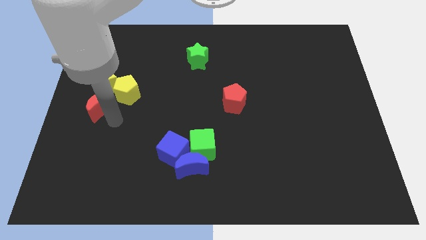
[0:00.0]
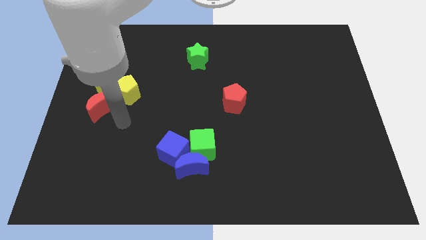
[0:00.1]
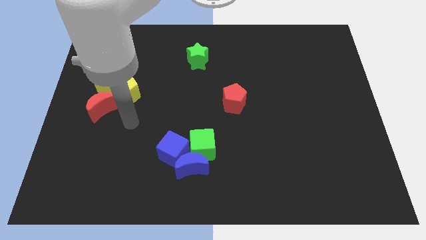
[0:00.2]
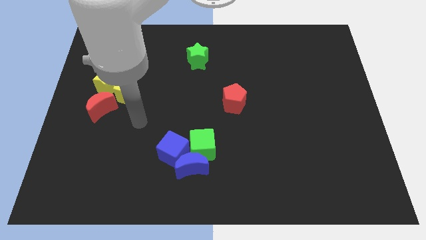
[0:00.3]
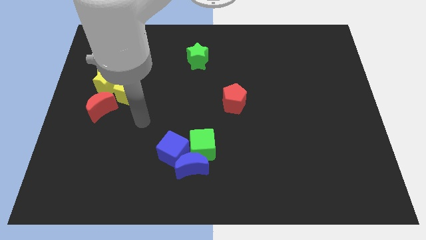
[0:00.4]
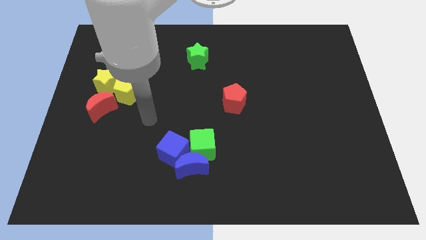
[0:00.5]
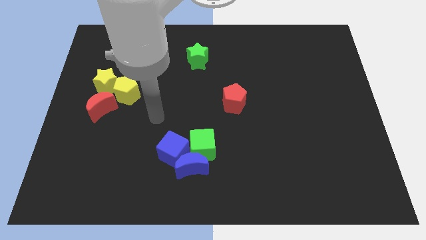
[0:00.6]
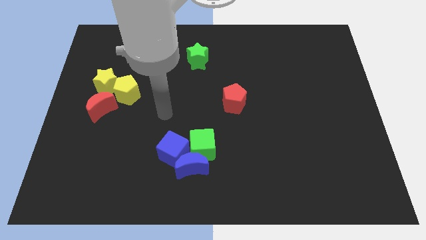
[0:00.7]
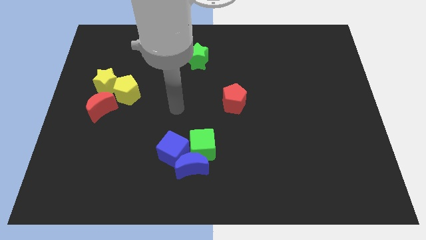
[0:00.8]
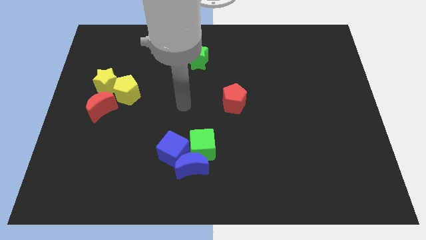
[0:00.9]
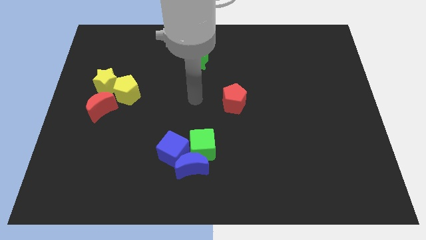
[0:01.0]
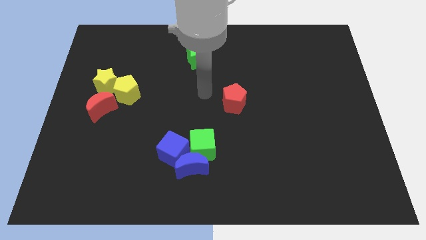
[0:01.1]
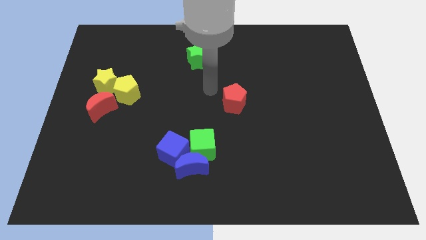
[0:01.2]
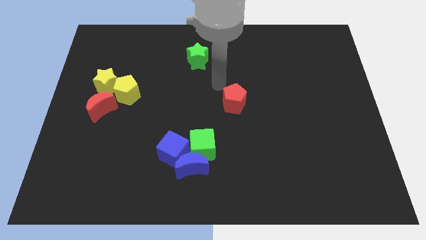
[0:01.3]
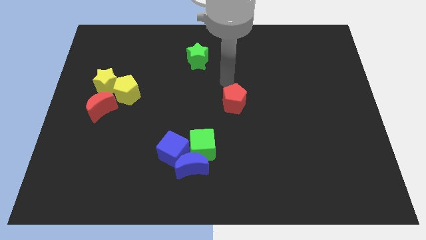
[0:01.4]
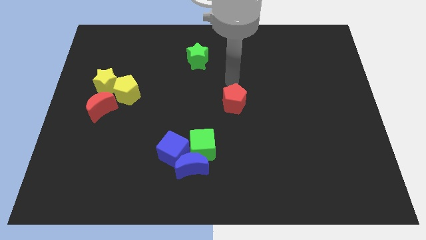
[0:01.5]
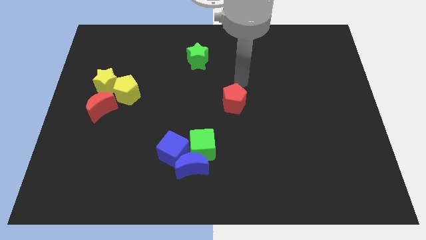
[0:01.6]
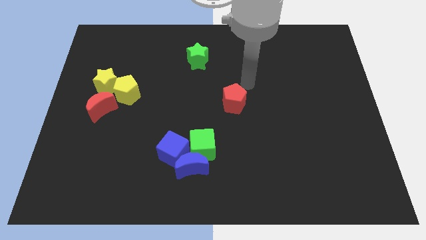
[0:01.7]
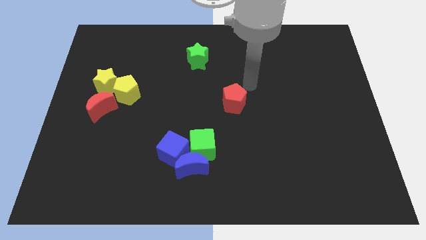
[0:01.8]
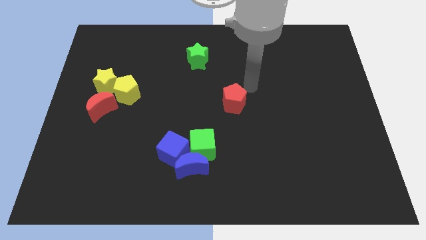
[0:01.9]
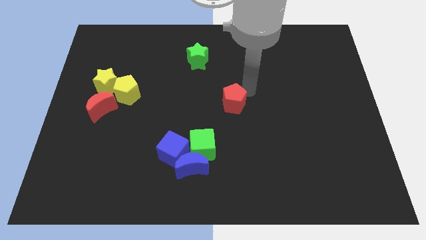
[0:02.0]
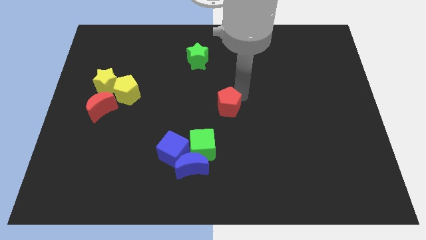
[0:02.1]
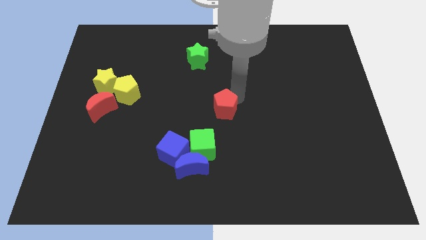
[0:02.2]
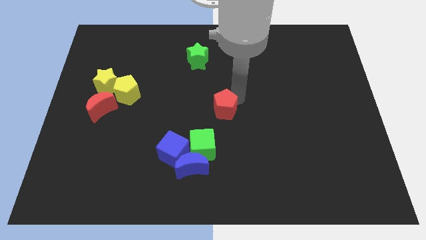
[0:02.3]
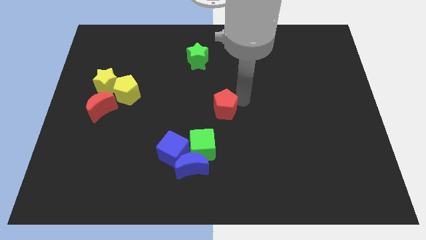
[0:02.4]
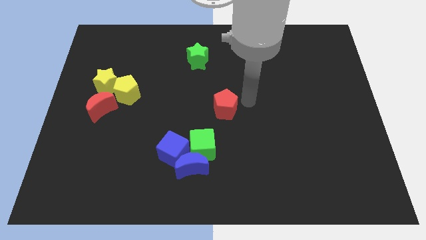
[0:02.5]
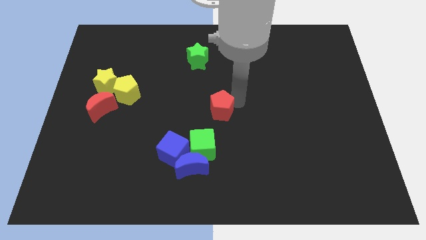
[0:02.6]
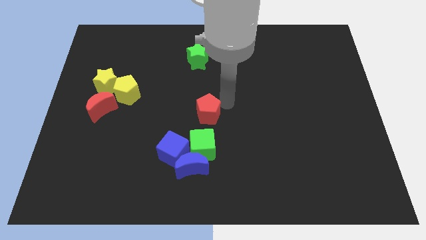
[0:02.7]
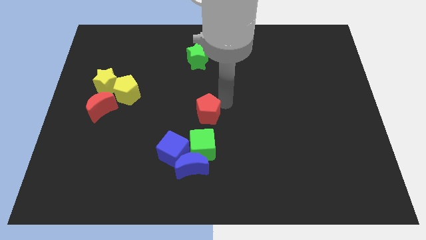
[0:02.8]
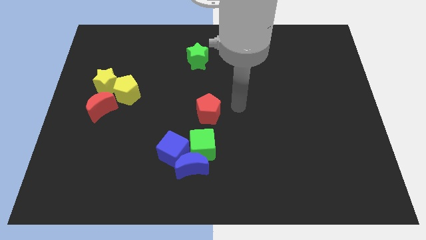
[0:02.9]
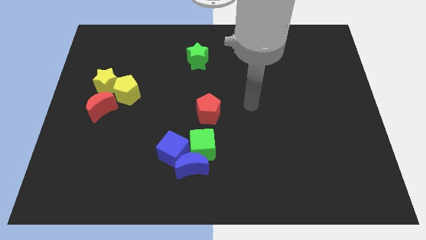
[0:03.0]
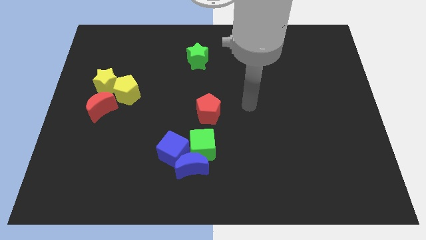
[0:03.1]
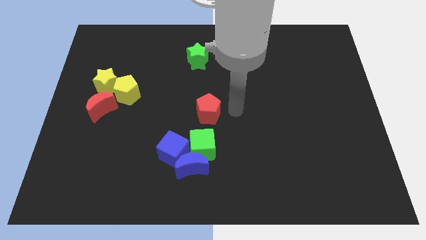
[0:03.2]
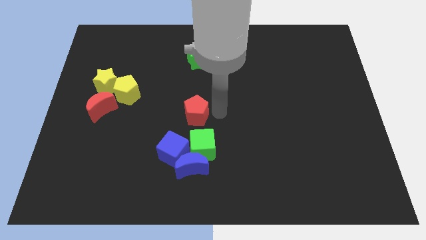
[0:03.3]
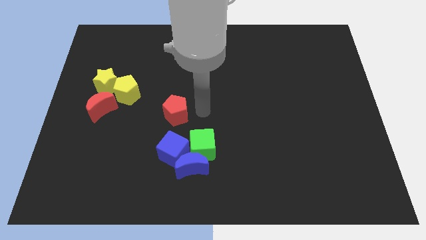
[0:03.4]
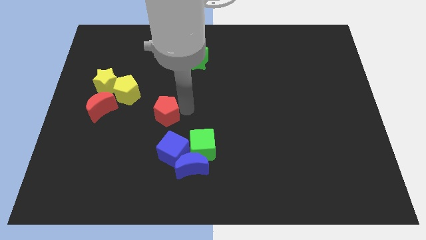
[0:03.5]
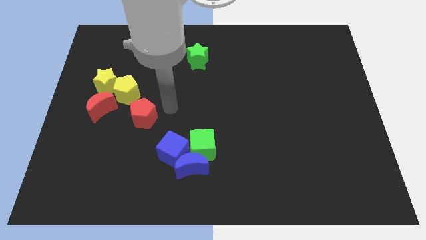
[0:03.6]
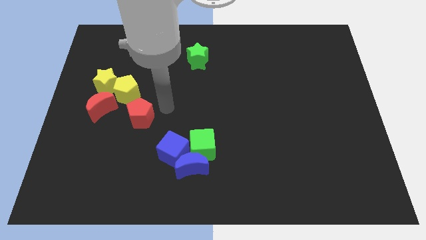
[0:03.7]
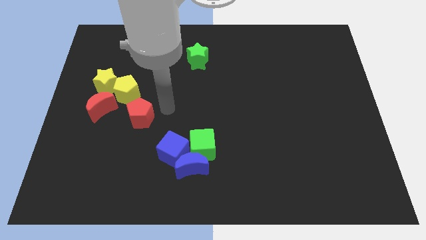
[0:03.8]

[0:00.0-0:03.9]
put the red pentagon in between the yellow pentagon and blue cube

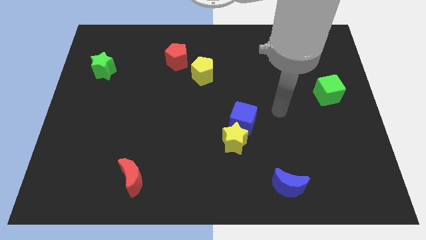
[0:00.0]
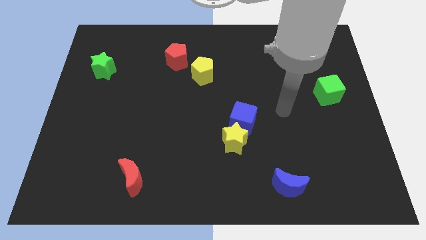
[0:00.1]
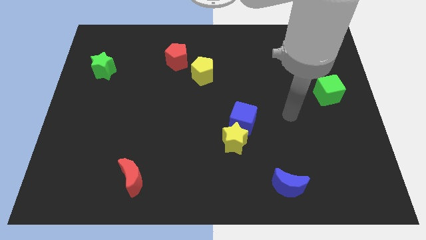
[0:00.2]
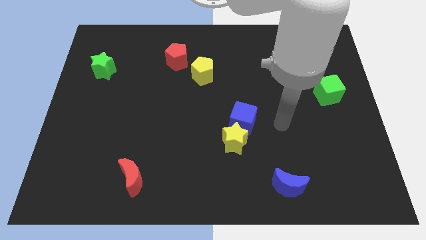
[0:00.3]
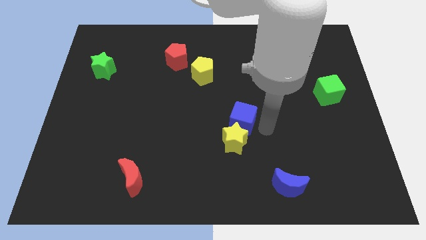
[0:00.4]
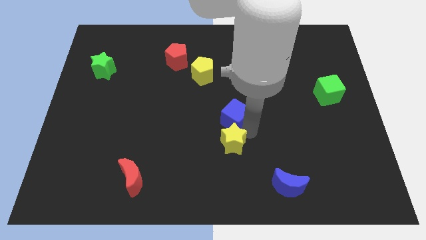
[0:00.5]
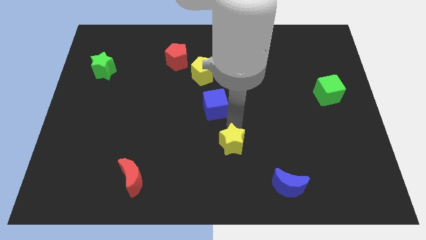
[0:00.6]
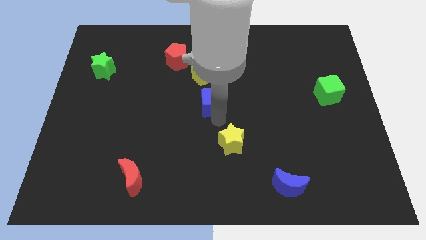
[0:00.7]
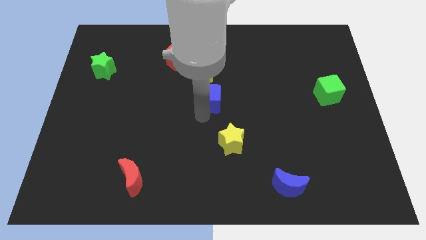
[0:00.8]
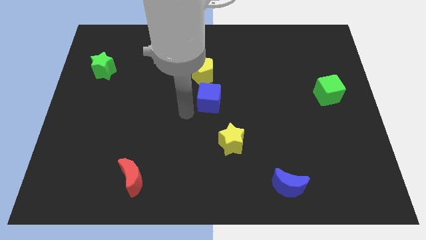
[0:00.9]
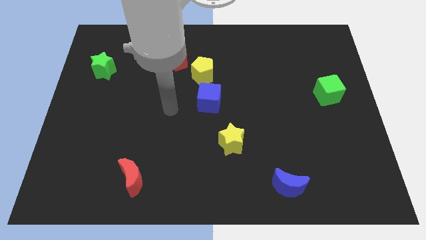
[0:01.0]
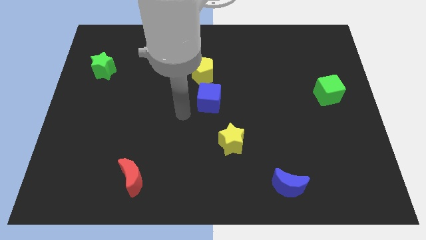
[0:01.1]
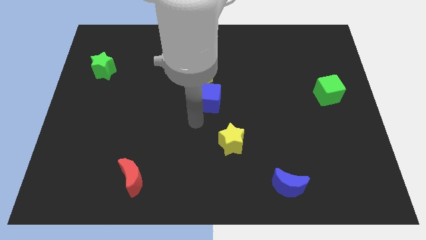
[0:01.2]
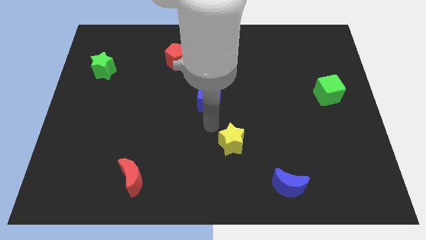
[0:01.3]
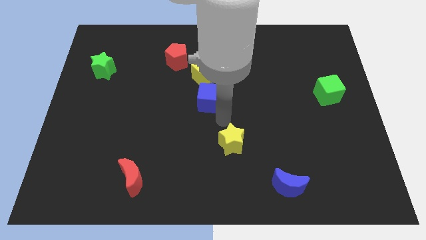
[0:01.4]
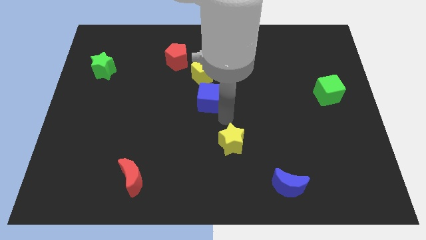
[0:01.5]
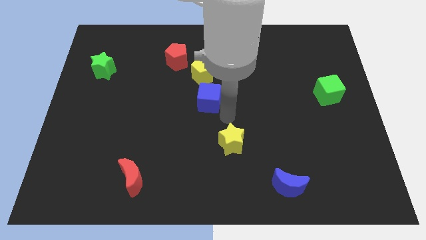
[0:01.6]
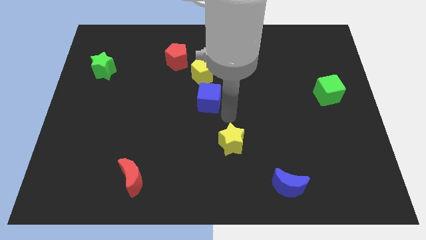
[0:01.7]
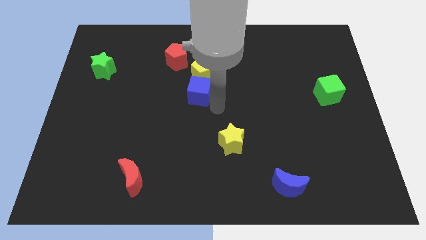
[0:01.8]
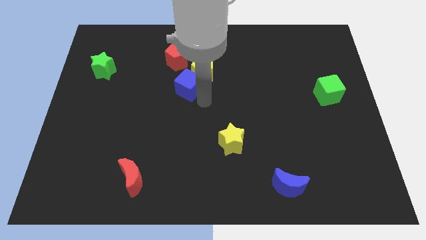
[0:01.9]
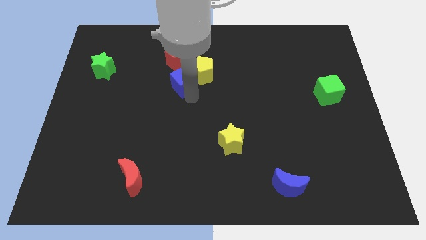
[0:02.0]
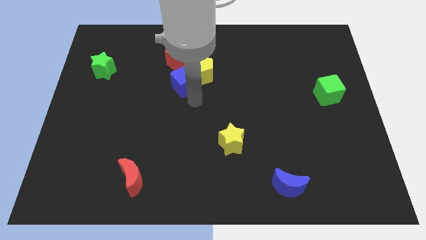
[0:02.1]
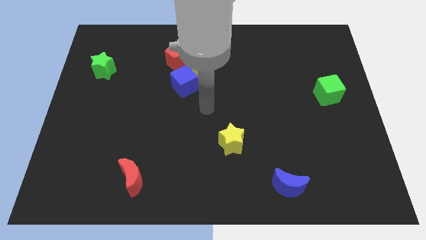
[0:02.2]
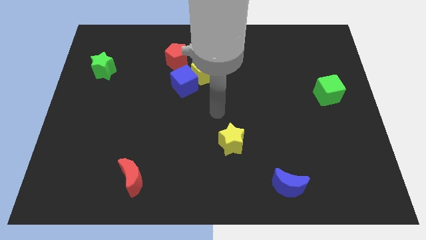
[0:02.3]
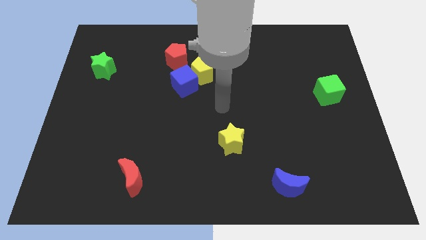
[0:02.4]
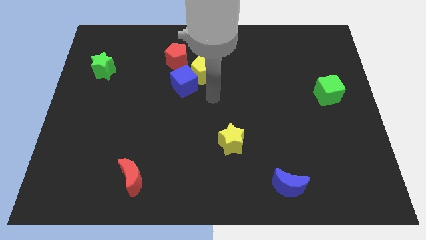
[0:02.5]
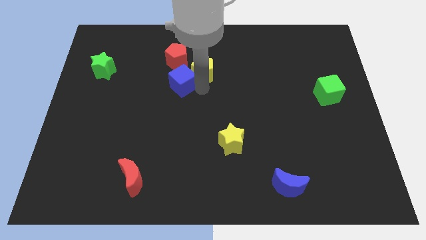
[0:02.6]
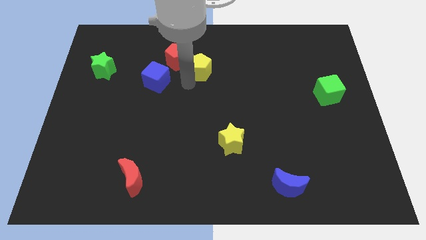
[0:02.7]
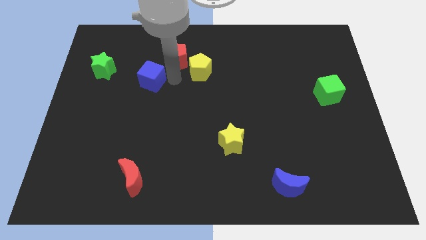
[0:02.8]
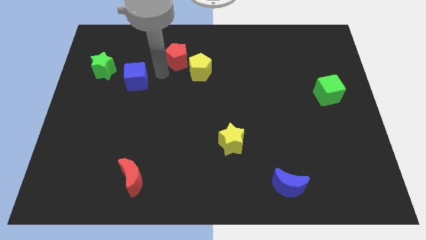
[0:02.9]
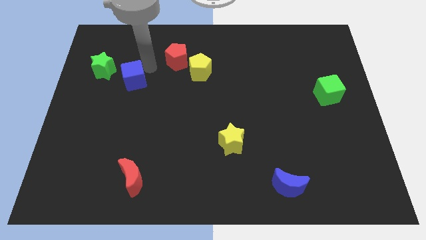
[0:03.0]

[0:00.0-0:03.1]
place the blue cube at the bottom right side of green star

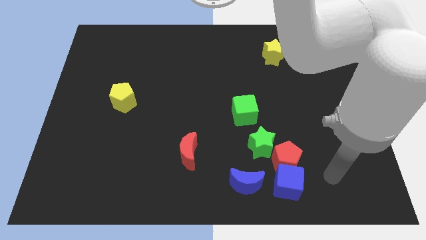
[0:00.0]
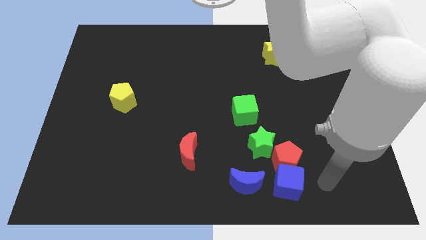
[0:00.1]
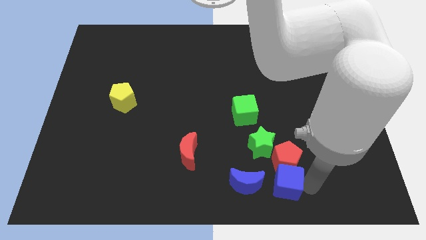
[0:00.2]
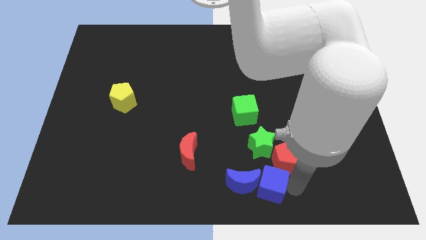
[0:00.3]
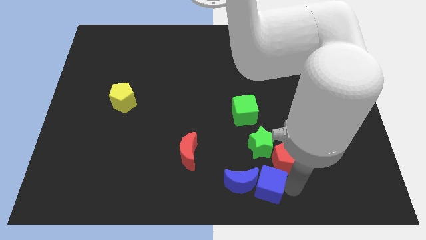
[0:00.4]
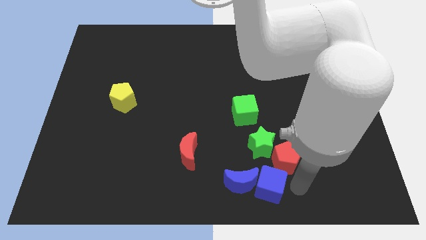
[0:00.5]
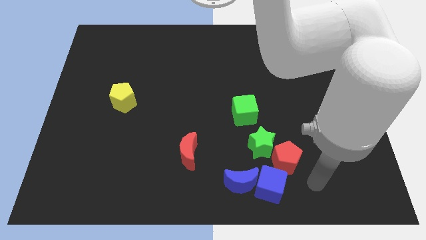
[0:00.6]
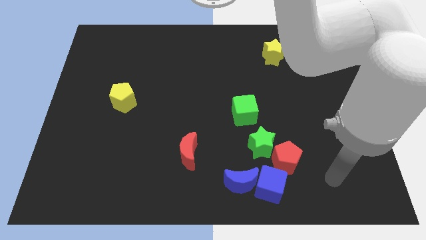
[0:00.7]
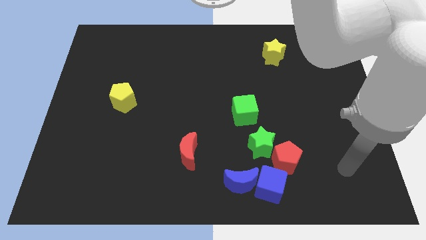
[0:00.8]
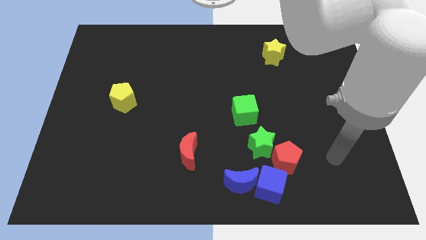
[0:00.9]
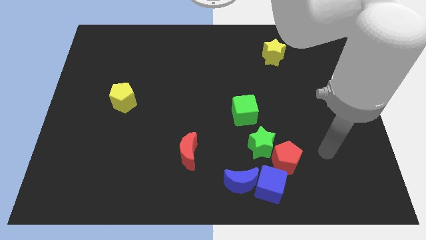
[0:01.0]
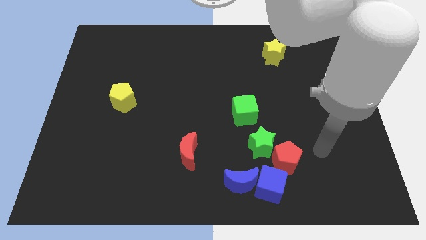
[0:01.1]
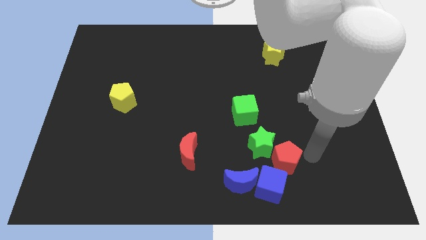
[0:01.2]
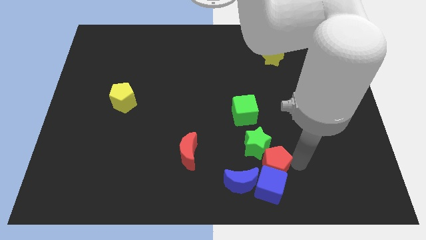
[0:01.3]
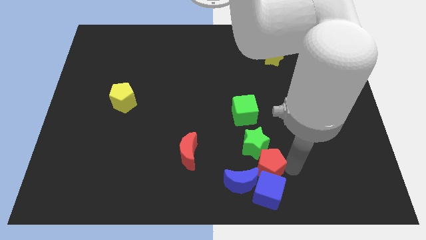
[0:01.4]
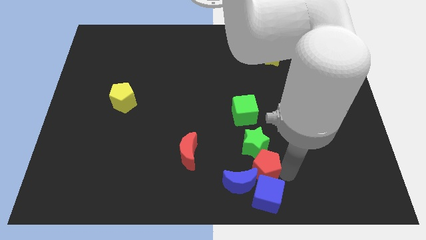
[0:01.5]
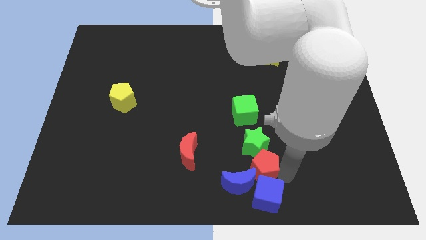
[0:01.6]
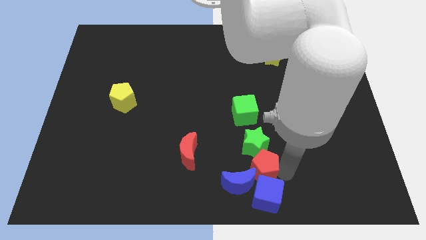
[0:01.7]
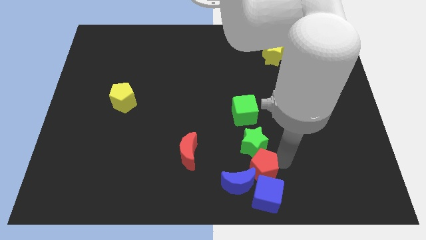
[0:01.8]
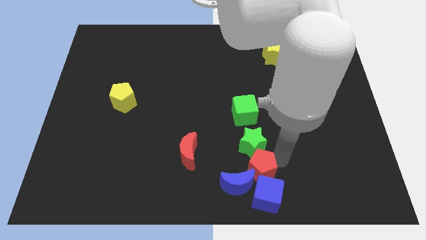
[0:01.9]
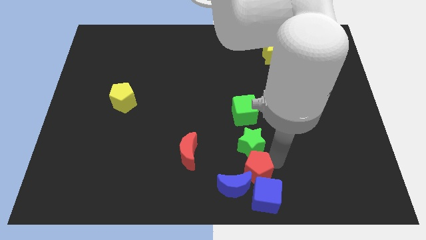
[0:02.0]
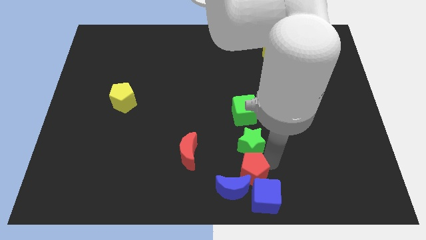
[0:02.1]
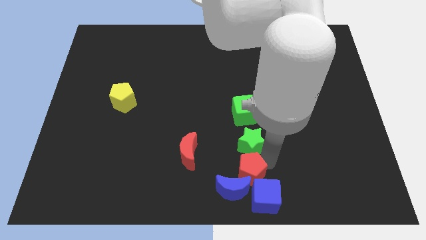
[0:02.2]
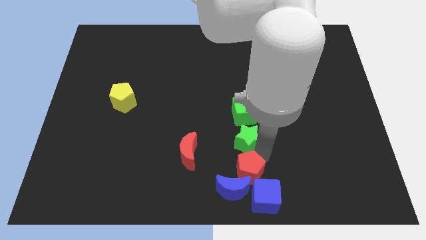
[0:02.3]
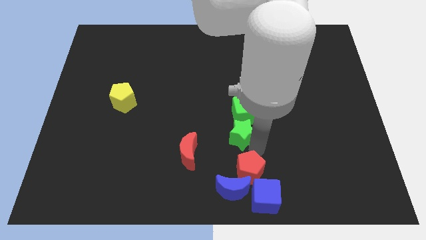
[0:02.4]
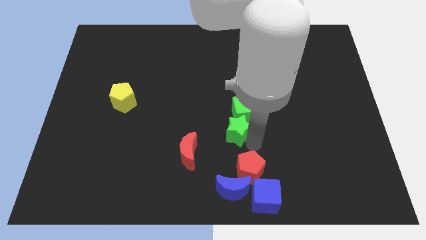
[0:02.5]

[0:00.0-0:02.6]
push the blue cube and red pentagon into blue crescent
